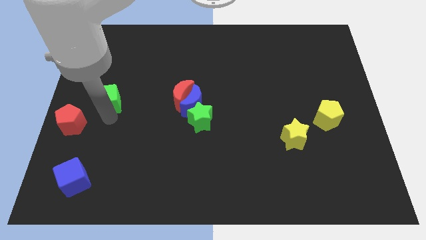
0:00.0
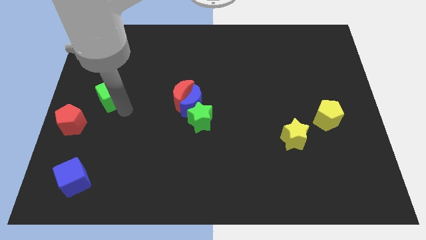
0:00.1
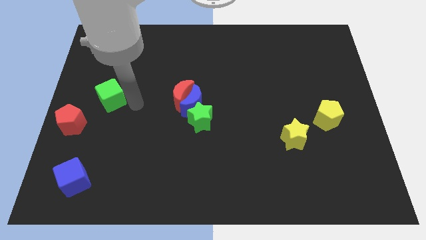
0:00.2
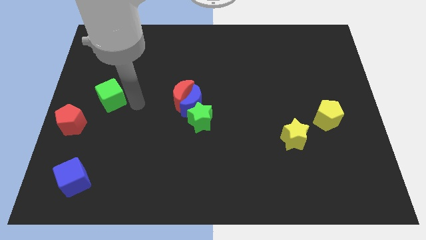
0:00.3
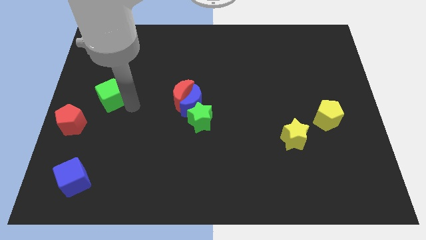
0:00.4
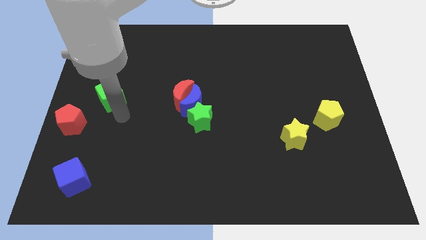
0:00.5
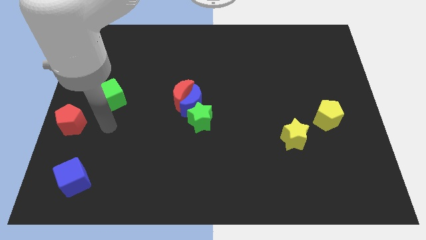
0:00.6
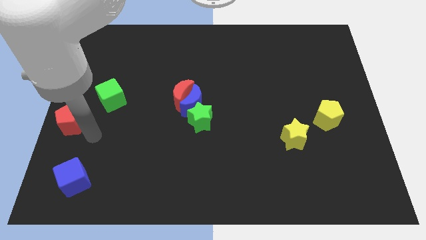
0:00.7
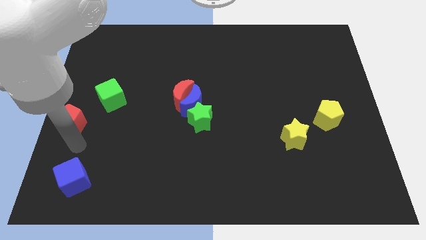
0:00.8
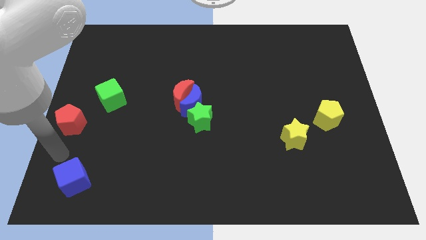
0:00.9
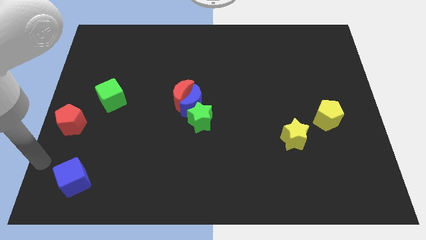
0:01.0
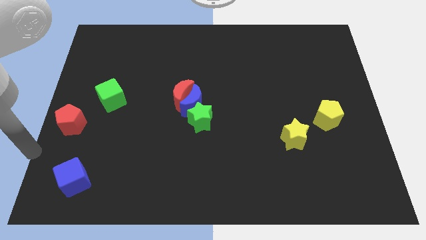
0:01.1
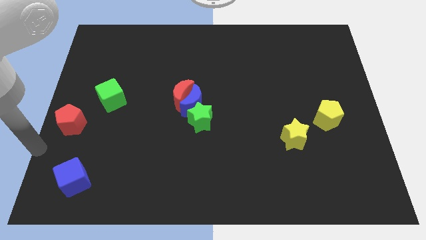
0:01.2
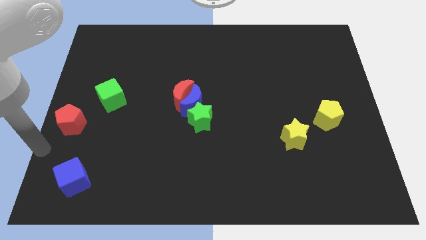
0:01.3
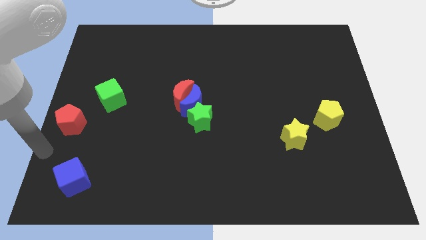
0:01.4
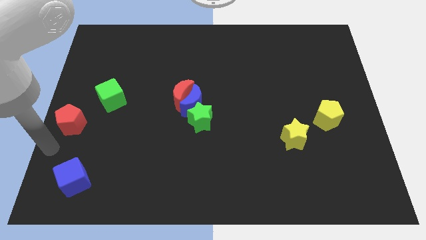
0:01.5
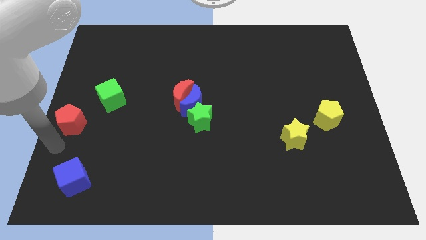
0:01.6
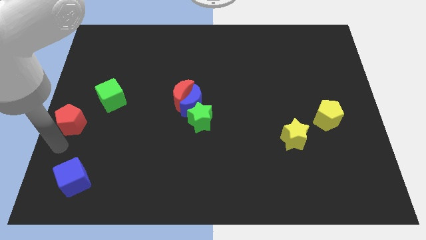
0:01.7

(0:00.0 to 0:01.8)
place your arm to the bottom of the red pentagon

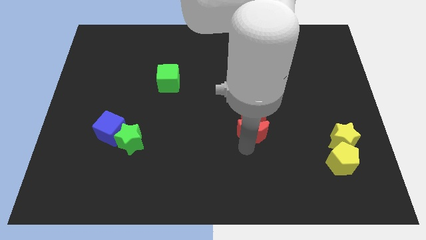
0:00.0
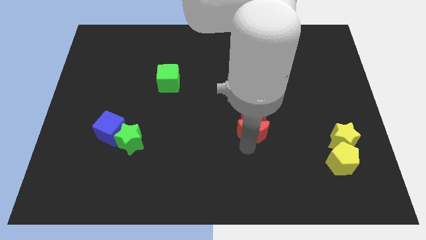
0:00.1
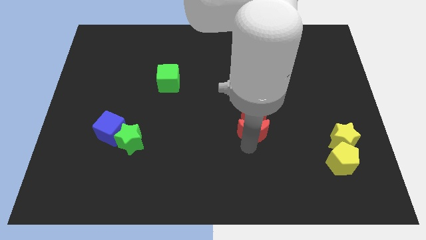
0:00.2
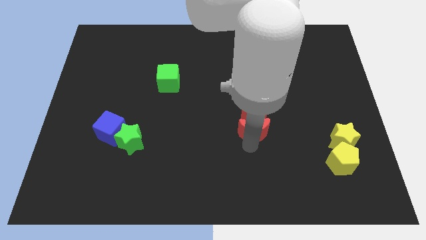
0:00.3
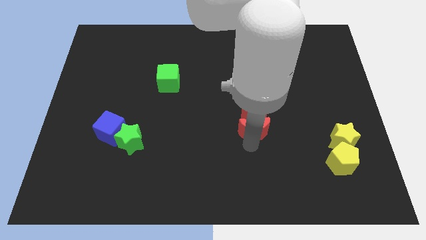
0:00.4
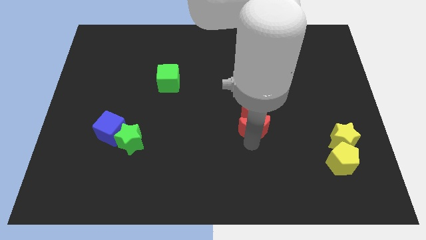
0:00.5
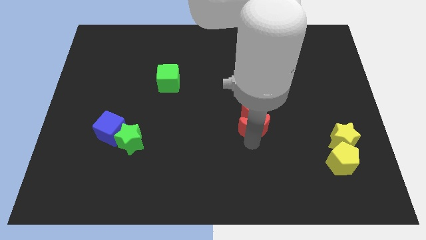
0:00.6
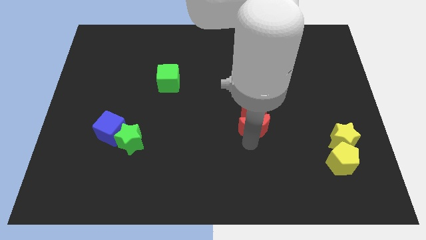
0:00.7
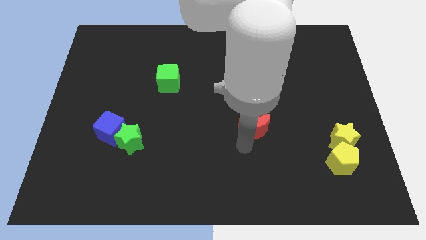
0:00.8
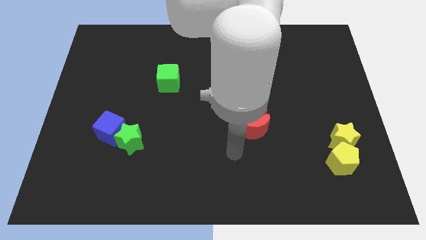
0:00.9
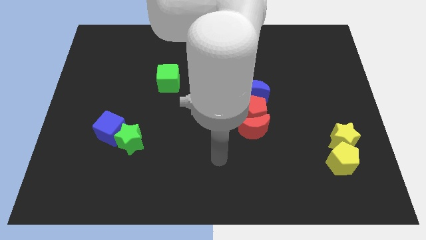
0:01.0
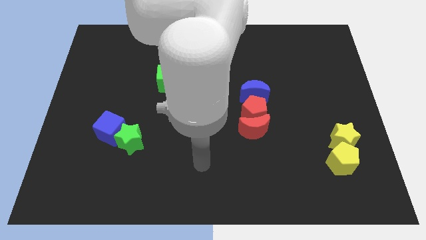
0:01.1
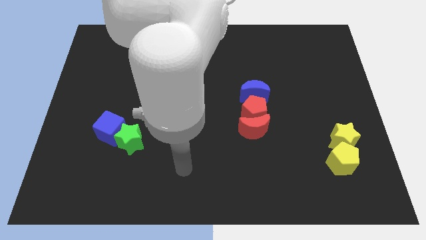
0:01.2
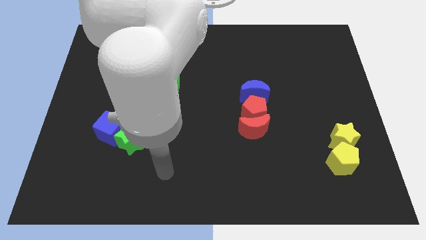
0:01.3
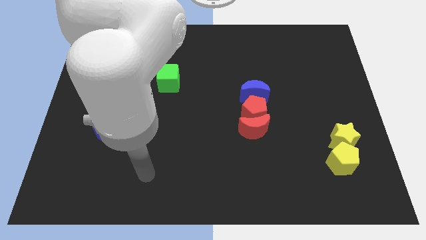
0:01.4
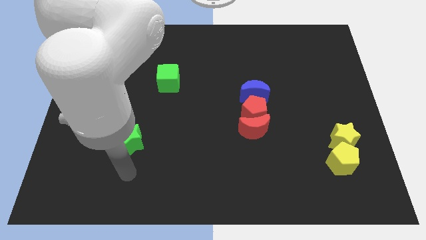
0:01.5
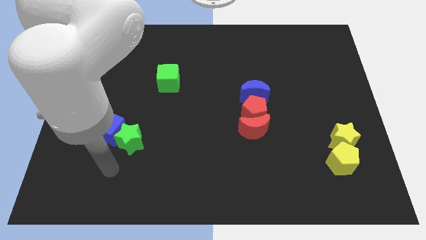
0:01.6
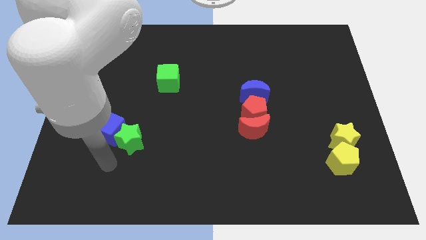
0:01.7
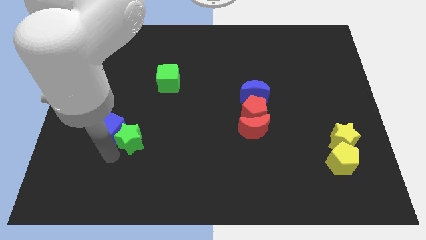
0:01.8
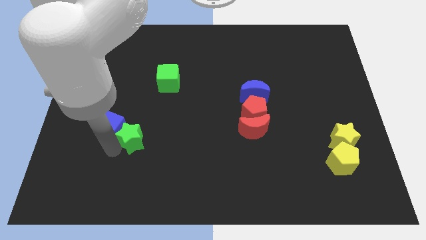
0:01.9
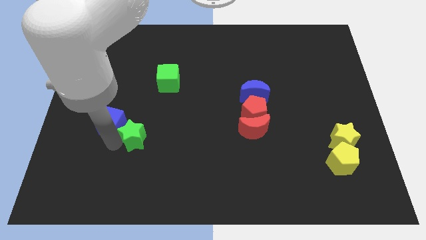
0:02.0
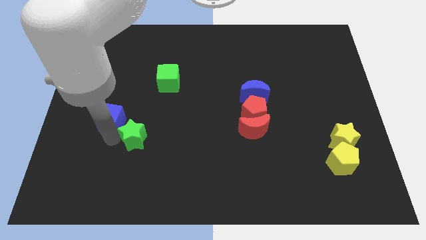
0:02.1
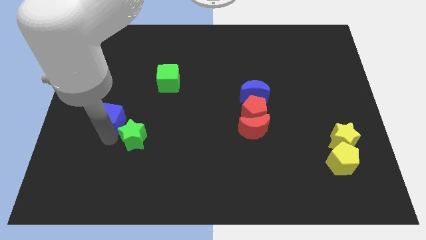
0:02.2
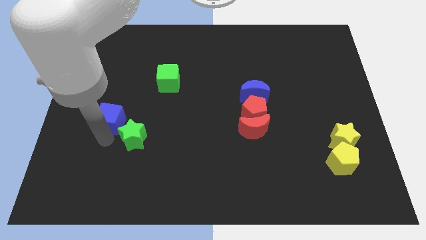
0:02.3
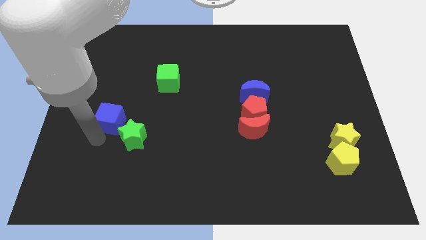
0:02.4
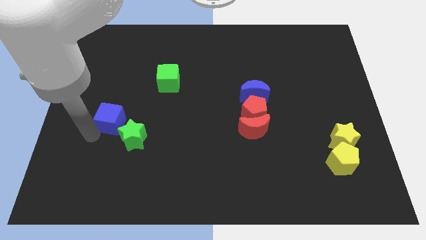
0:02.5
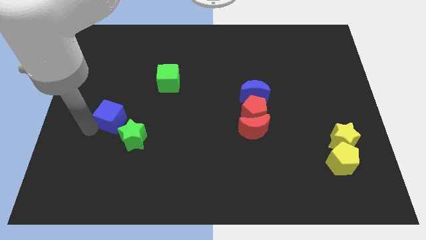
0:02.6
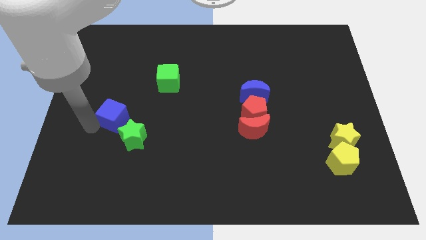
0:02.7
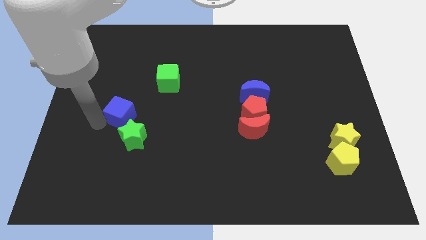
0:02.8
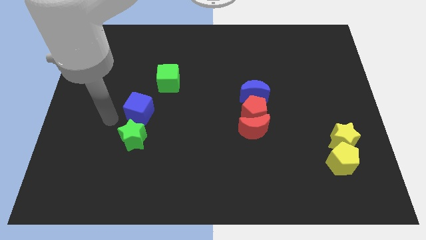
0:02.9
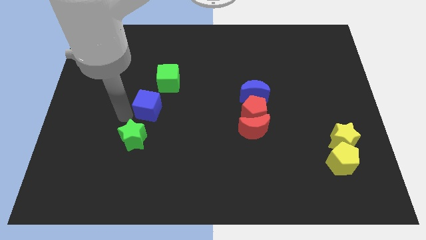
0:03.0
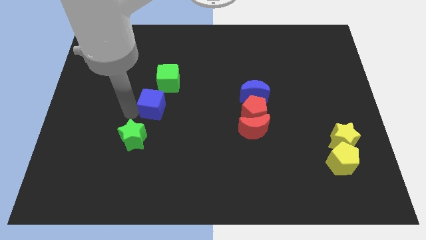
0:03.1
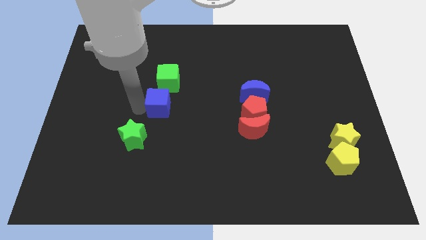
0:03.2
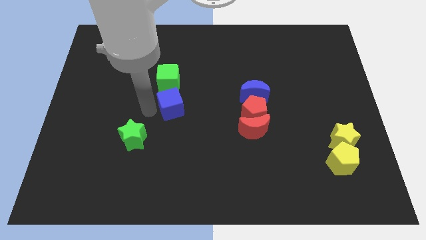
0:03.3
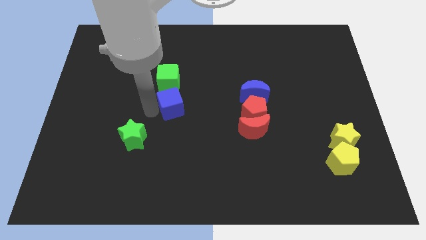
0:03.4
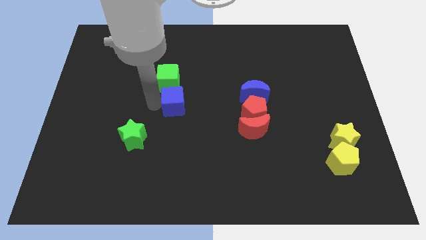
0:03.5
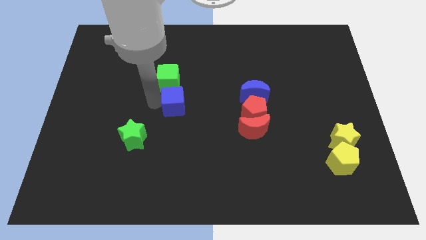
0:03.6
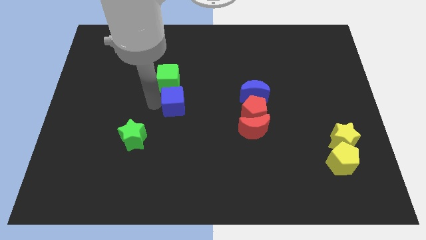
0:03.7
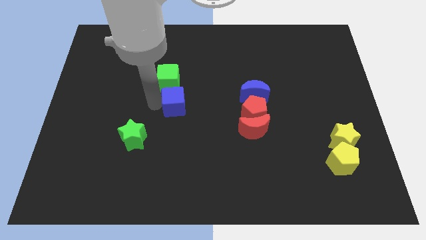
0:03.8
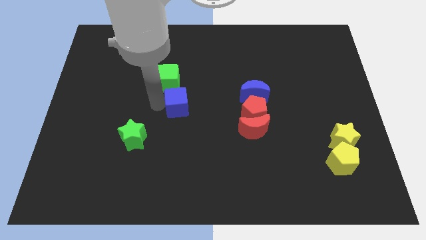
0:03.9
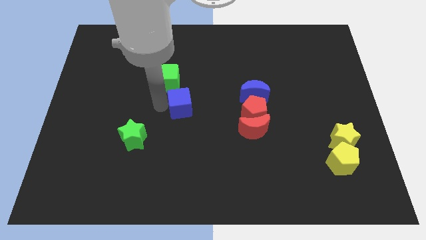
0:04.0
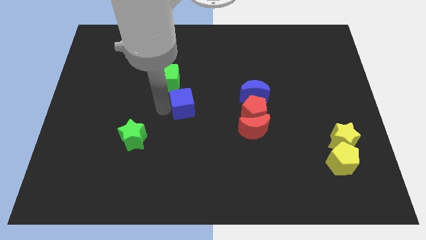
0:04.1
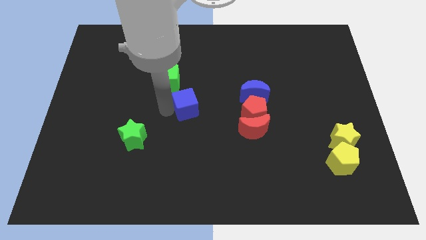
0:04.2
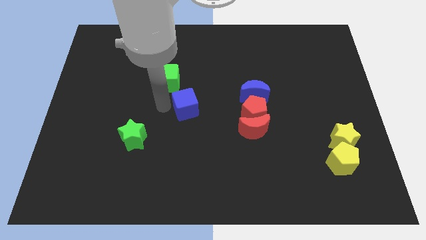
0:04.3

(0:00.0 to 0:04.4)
separate blue cube from the green star and move it to its right

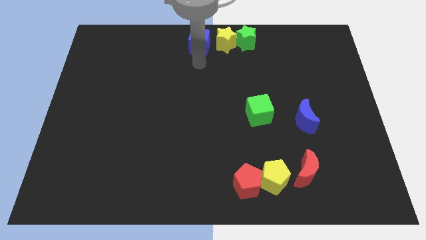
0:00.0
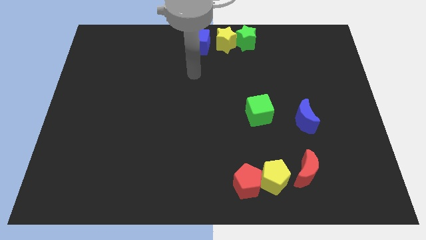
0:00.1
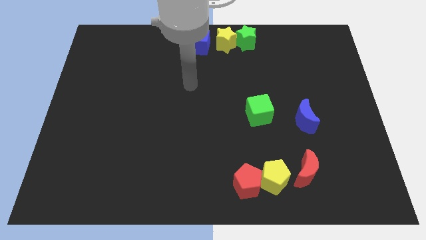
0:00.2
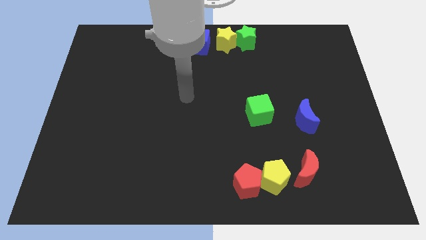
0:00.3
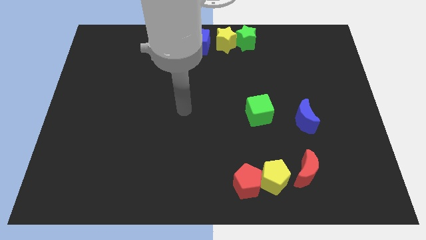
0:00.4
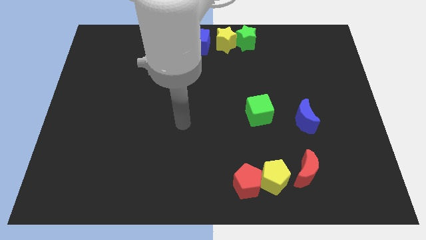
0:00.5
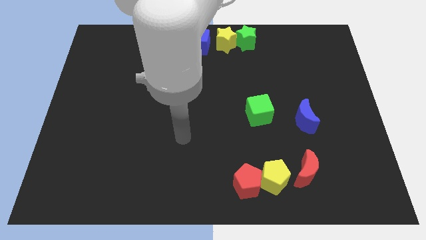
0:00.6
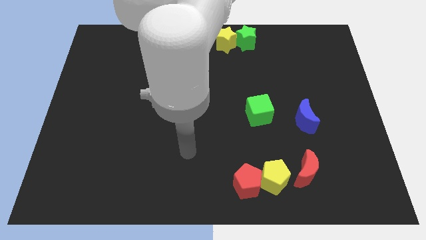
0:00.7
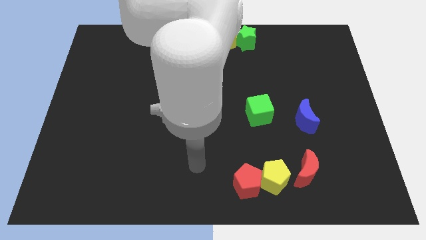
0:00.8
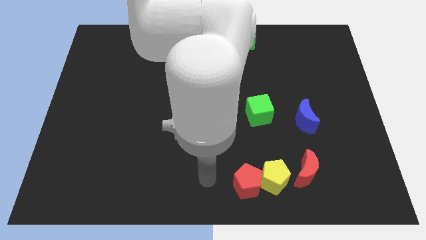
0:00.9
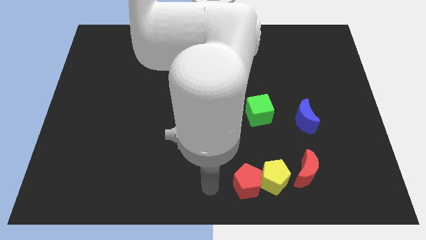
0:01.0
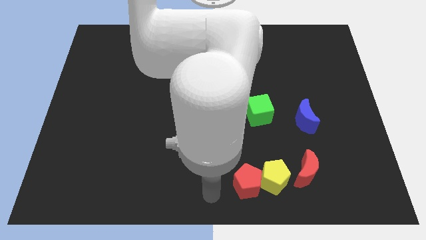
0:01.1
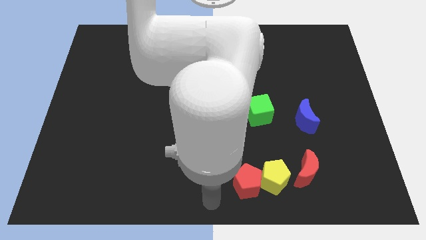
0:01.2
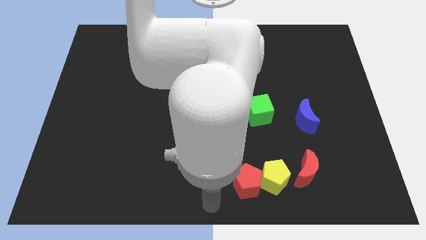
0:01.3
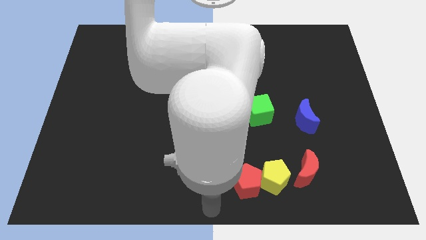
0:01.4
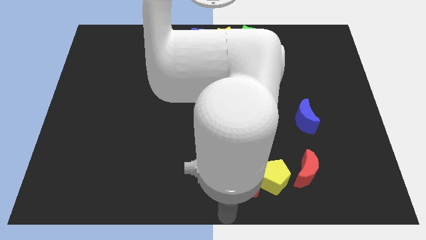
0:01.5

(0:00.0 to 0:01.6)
place the arm below the red pentagon

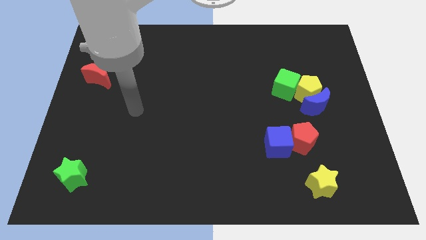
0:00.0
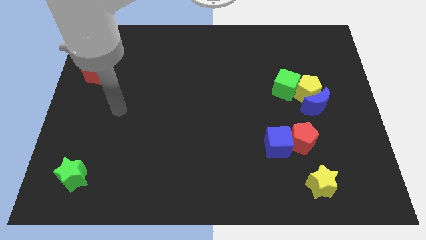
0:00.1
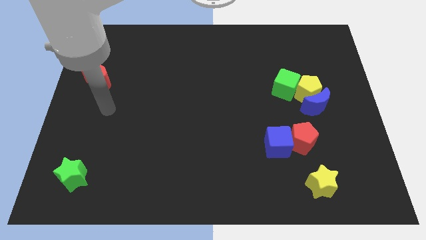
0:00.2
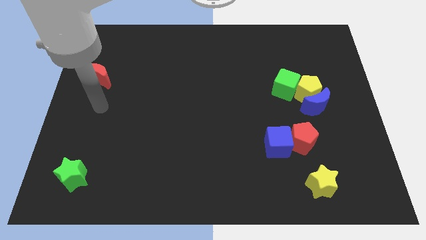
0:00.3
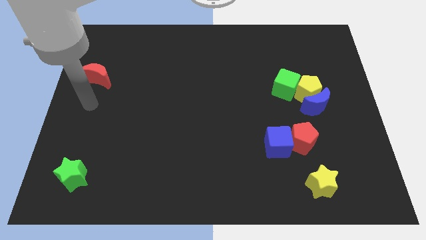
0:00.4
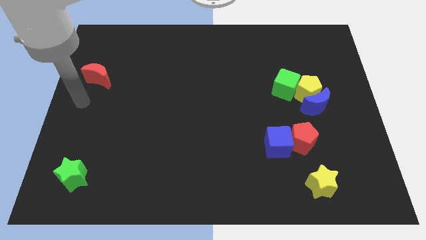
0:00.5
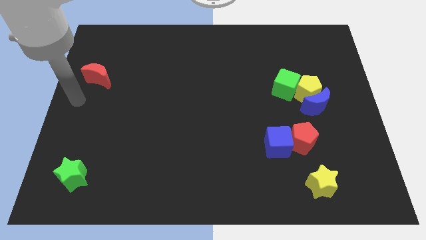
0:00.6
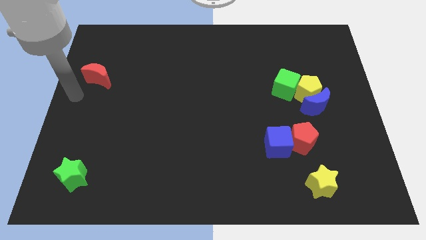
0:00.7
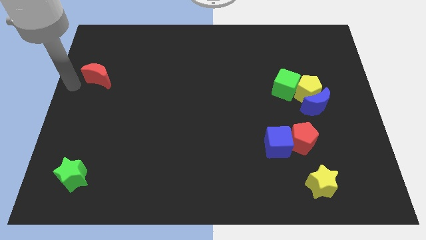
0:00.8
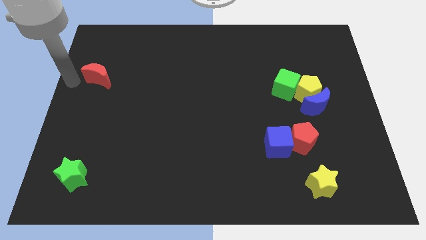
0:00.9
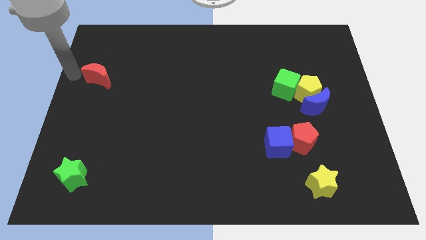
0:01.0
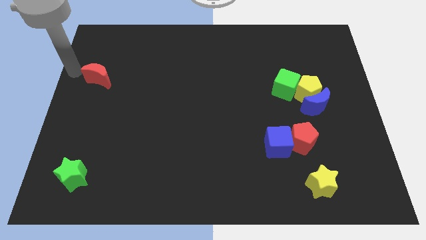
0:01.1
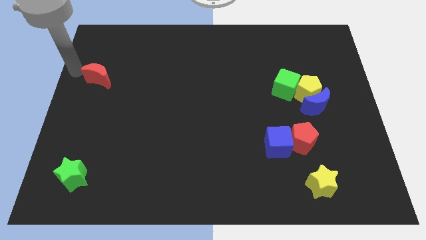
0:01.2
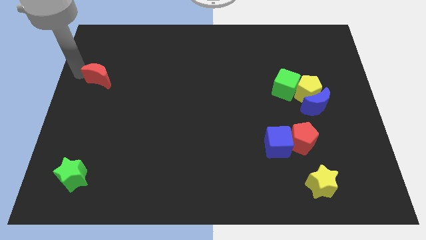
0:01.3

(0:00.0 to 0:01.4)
move your arm towards the top of red crescent
